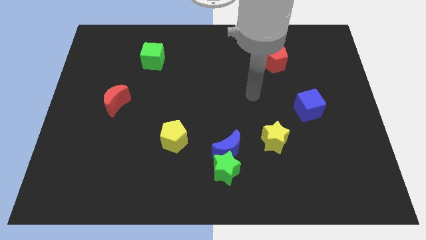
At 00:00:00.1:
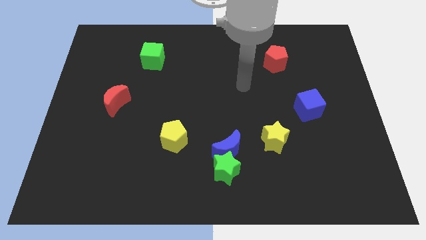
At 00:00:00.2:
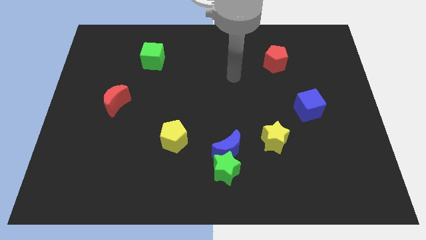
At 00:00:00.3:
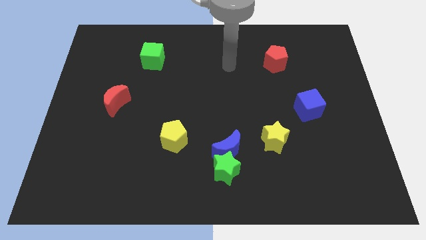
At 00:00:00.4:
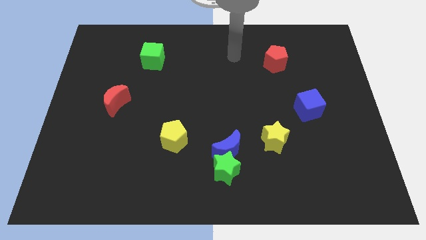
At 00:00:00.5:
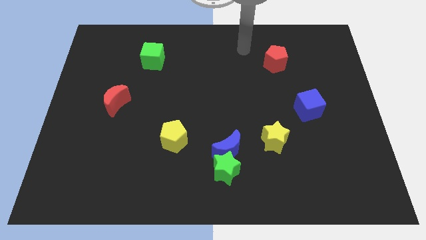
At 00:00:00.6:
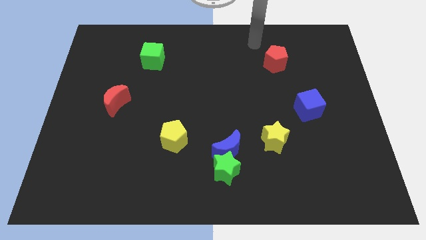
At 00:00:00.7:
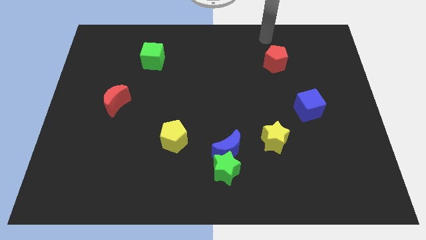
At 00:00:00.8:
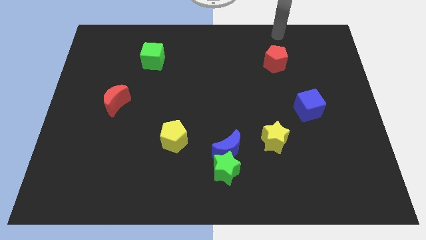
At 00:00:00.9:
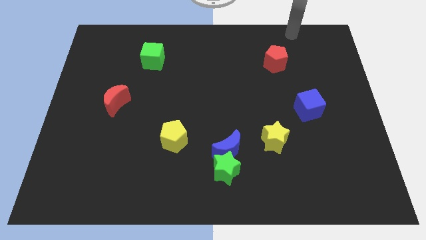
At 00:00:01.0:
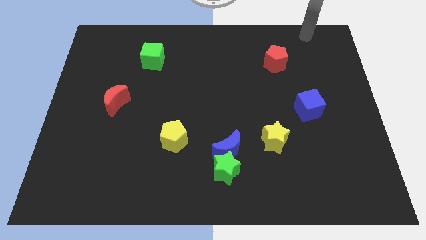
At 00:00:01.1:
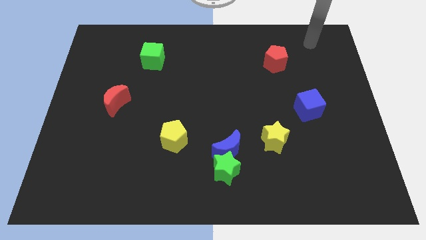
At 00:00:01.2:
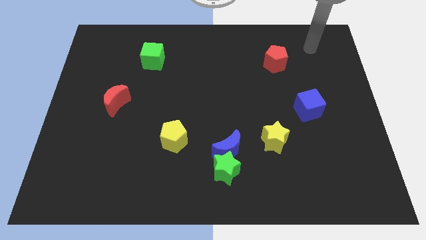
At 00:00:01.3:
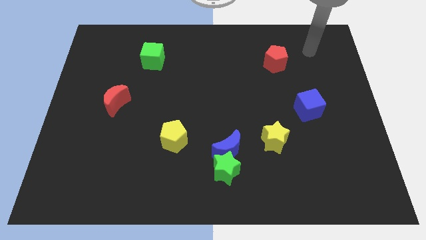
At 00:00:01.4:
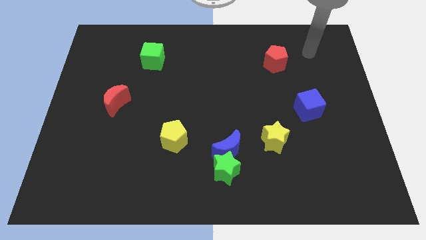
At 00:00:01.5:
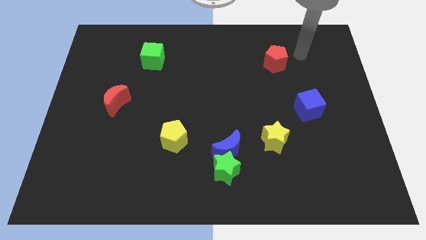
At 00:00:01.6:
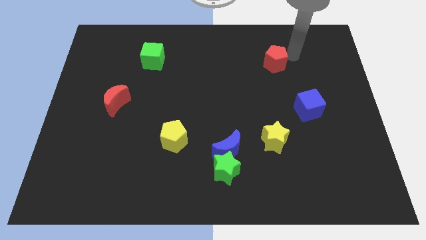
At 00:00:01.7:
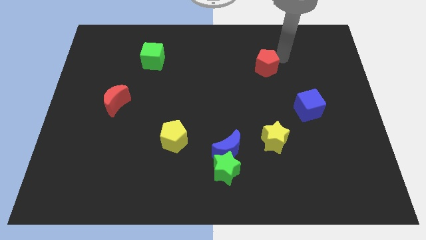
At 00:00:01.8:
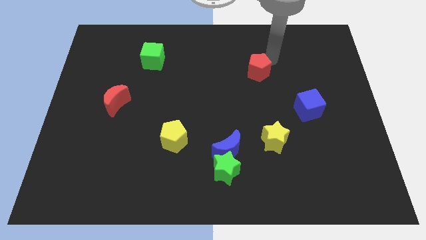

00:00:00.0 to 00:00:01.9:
move the red pentagon towards the center of the board

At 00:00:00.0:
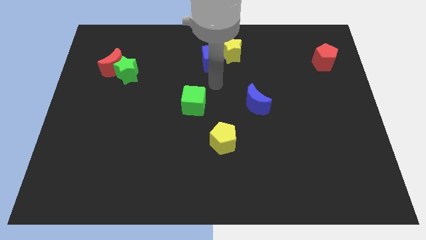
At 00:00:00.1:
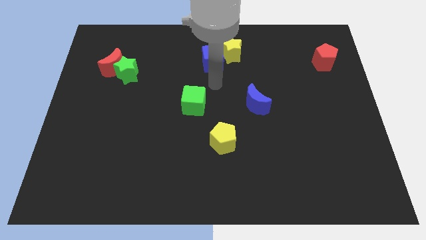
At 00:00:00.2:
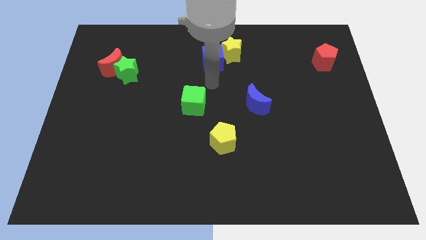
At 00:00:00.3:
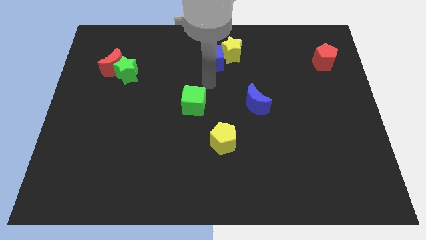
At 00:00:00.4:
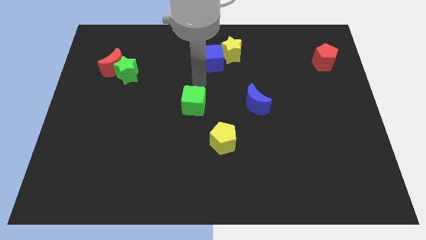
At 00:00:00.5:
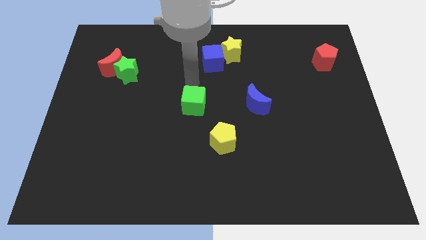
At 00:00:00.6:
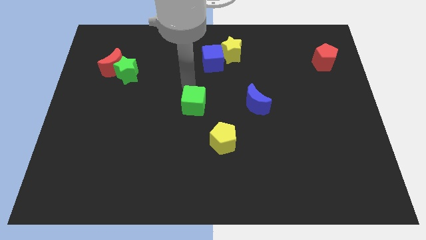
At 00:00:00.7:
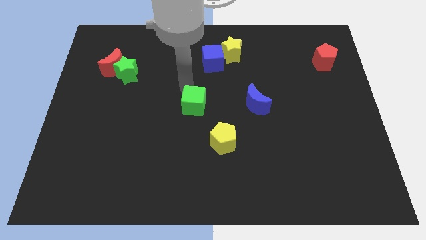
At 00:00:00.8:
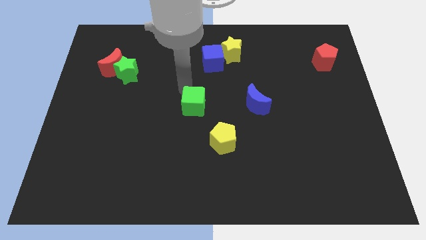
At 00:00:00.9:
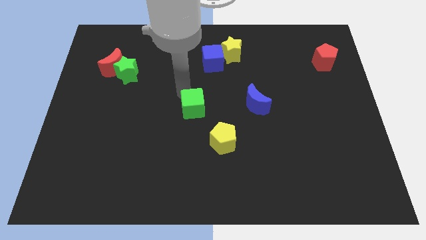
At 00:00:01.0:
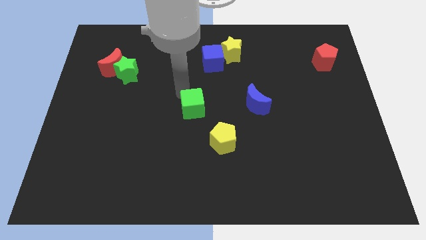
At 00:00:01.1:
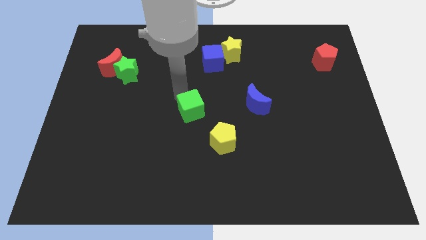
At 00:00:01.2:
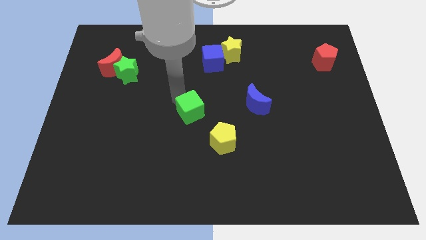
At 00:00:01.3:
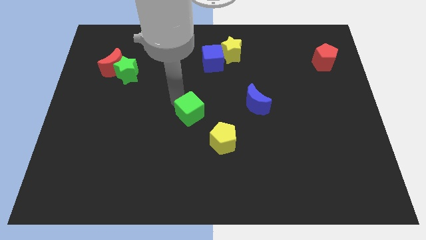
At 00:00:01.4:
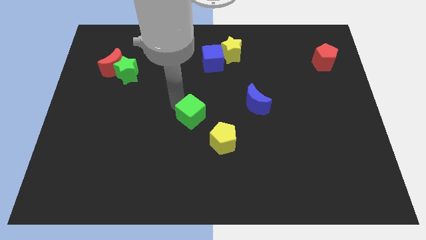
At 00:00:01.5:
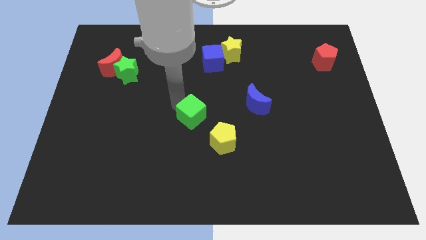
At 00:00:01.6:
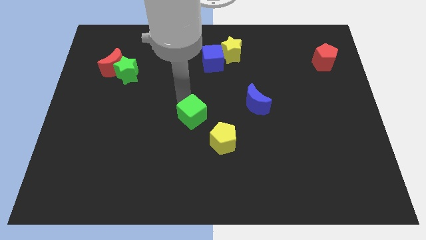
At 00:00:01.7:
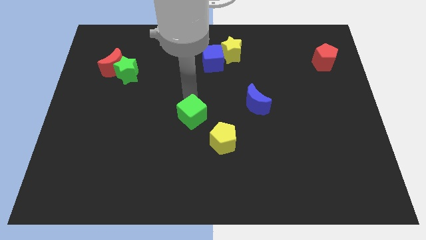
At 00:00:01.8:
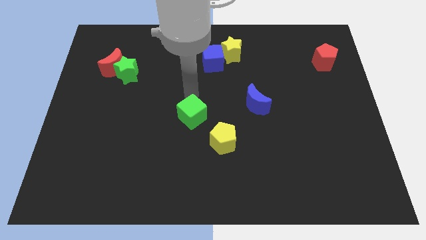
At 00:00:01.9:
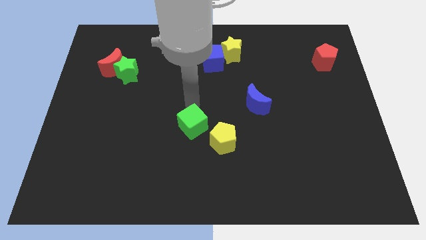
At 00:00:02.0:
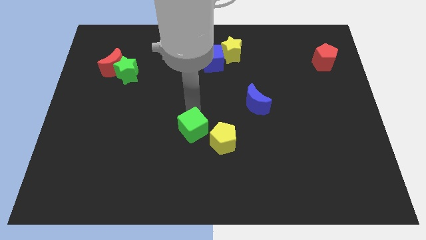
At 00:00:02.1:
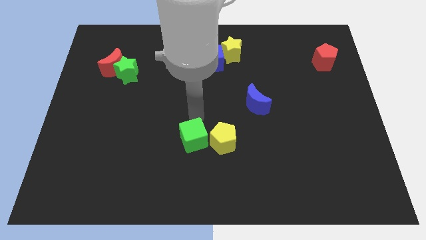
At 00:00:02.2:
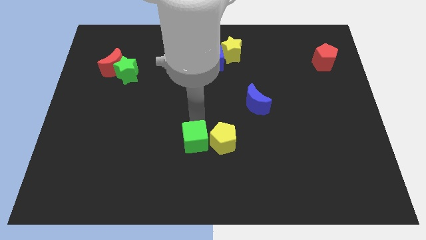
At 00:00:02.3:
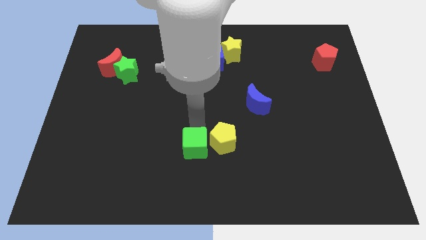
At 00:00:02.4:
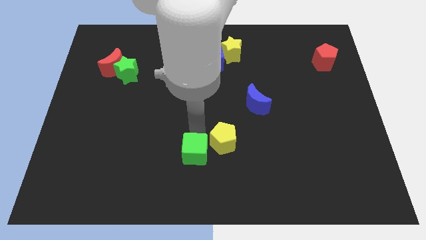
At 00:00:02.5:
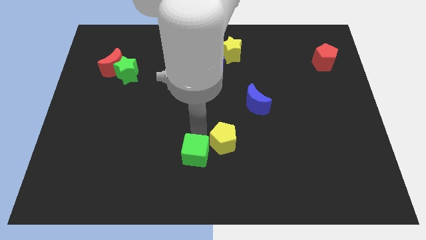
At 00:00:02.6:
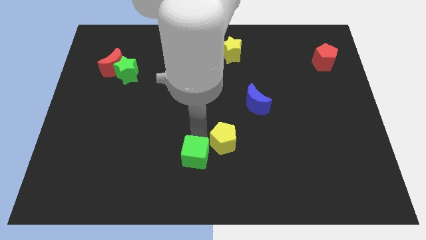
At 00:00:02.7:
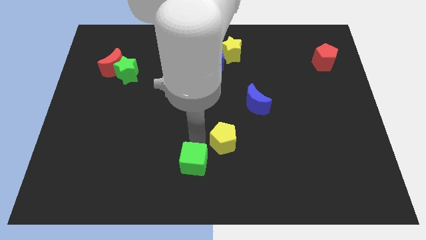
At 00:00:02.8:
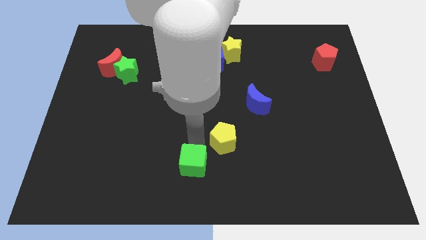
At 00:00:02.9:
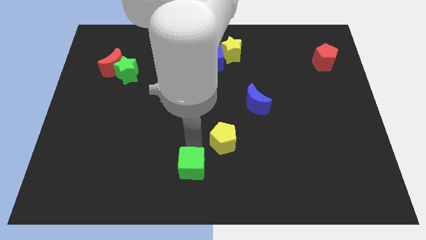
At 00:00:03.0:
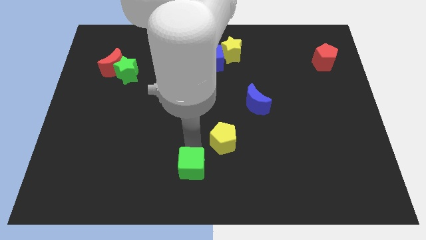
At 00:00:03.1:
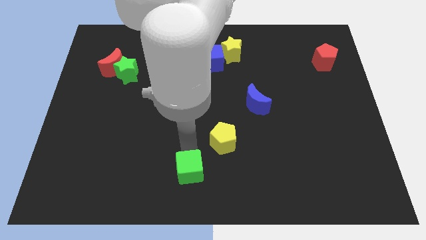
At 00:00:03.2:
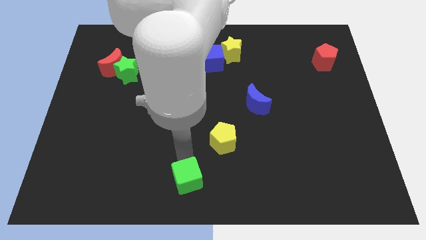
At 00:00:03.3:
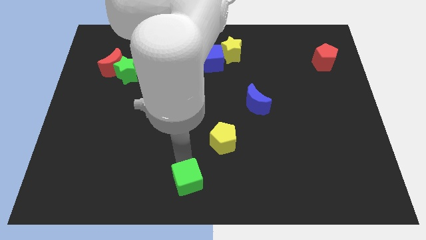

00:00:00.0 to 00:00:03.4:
move the green cube to the bottom side

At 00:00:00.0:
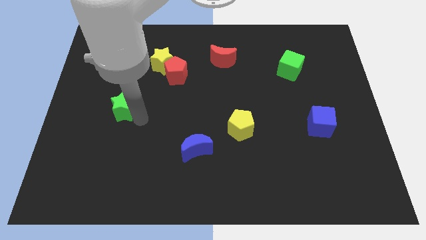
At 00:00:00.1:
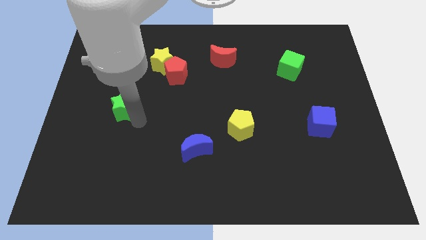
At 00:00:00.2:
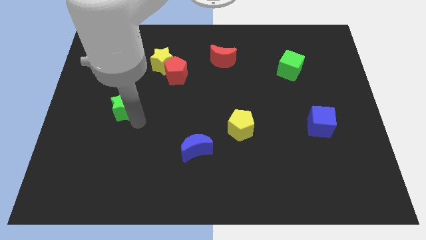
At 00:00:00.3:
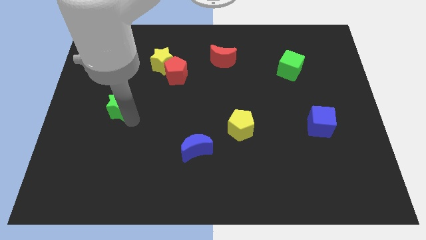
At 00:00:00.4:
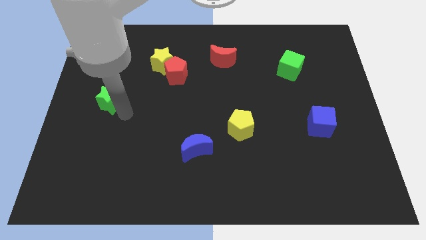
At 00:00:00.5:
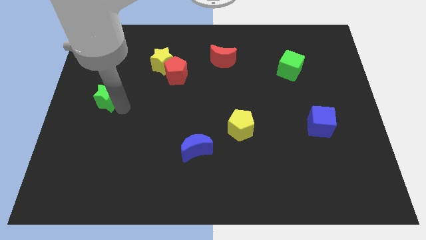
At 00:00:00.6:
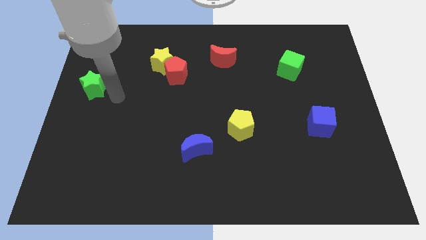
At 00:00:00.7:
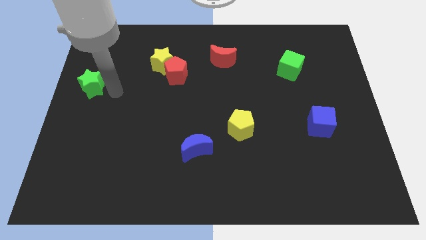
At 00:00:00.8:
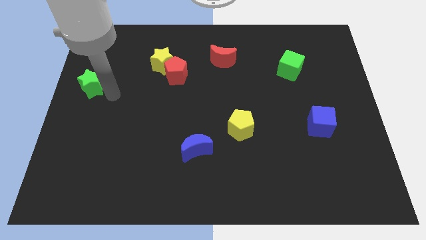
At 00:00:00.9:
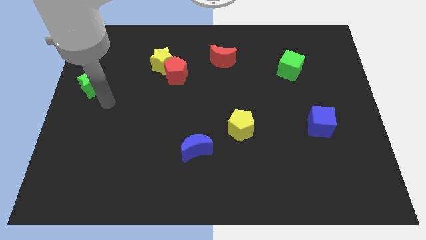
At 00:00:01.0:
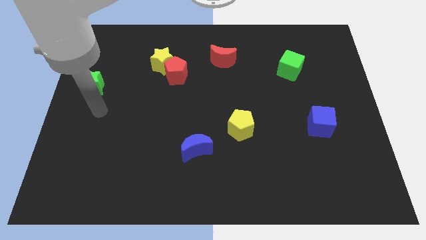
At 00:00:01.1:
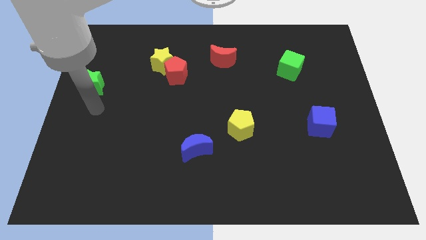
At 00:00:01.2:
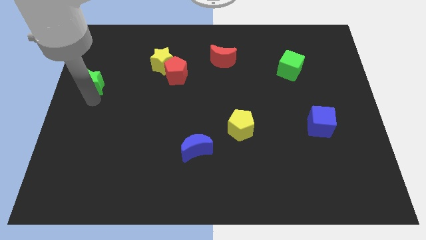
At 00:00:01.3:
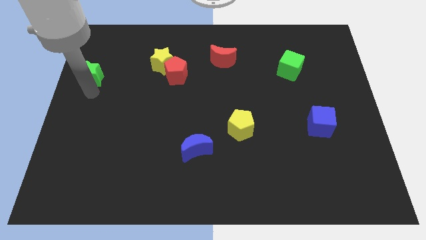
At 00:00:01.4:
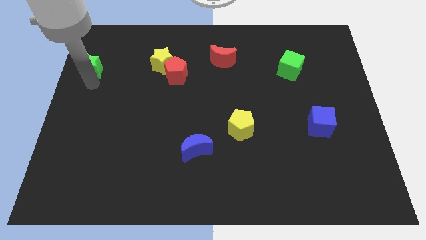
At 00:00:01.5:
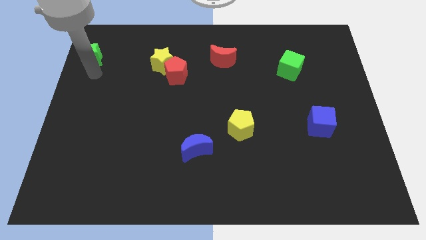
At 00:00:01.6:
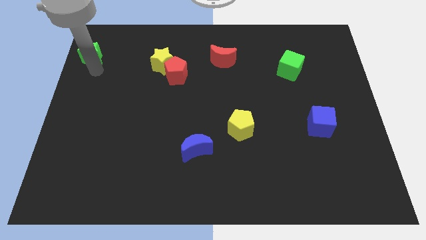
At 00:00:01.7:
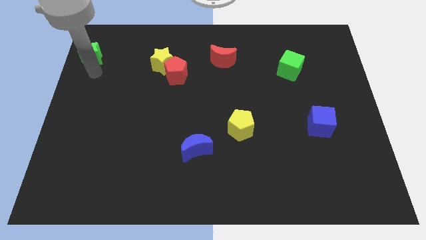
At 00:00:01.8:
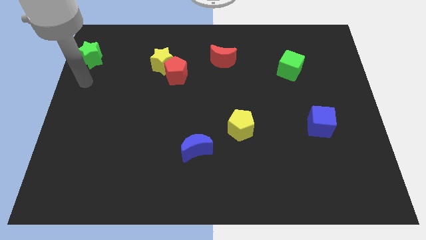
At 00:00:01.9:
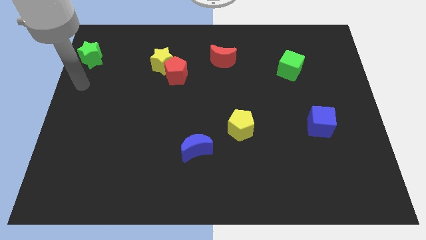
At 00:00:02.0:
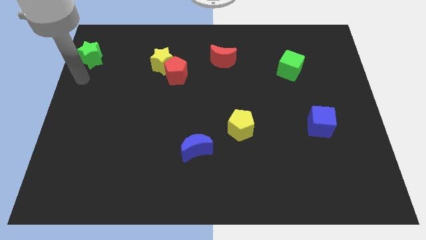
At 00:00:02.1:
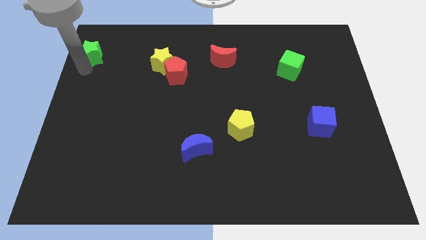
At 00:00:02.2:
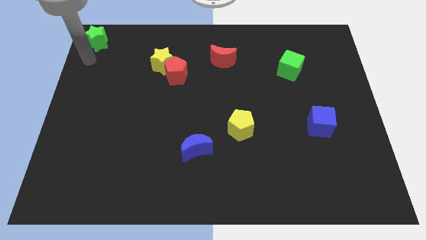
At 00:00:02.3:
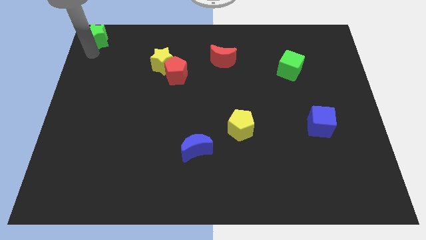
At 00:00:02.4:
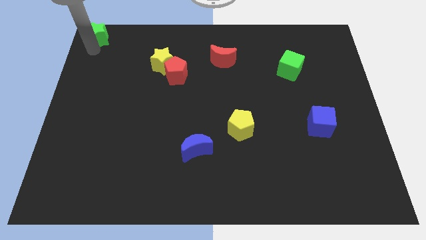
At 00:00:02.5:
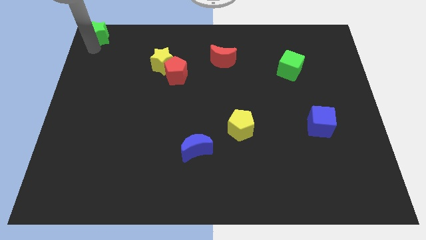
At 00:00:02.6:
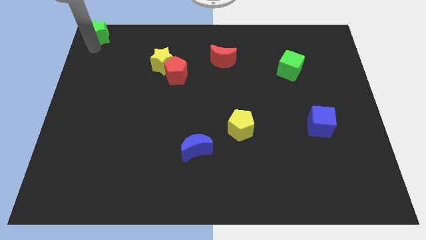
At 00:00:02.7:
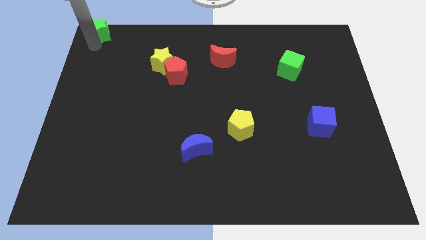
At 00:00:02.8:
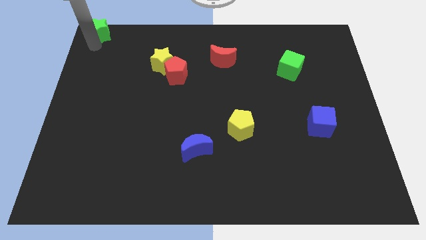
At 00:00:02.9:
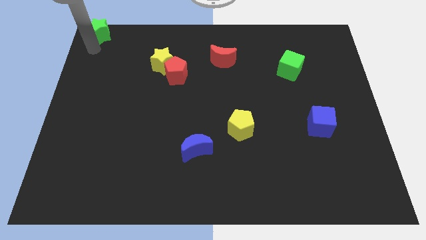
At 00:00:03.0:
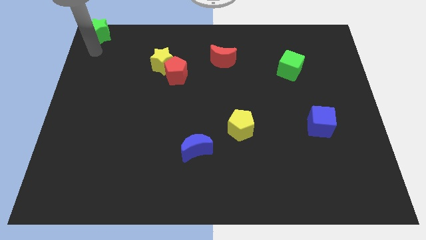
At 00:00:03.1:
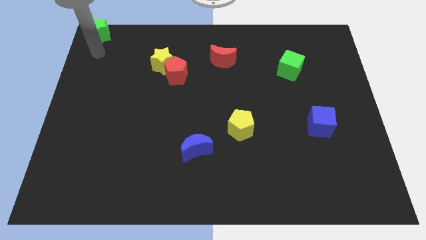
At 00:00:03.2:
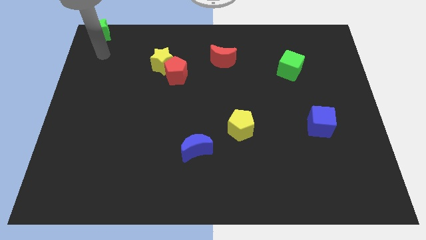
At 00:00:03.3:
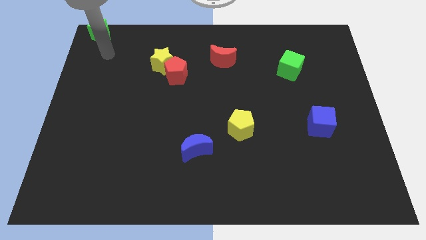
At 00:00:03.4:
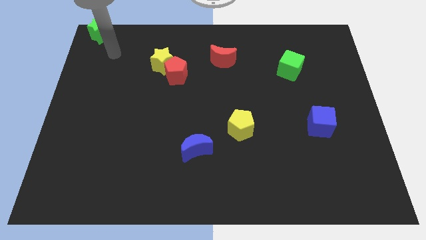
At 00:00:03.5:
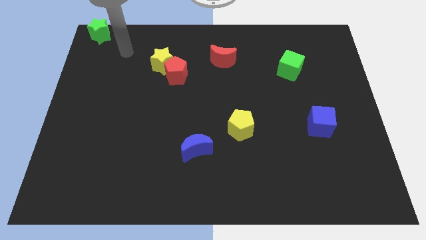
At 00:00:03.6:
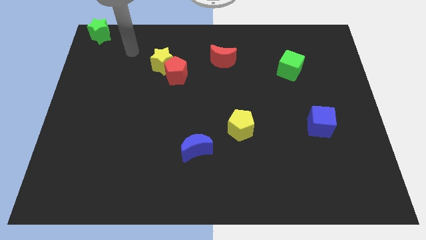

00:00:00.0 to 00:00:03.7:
place the green star at the top left corner of the board
